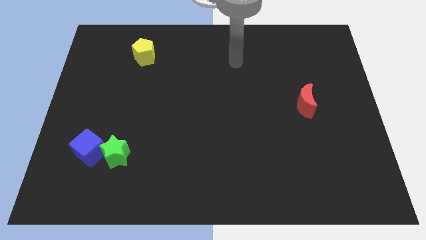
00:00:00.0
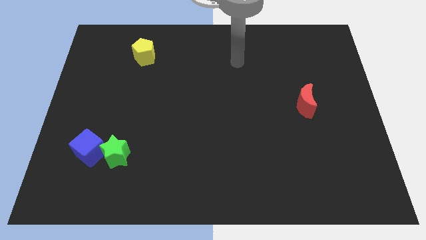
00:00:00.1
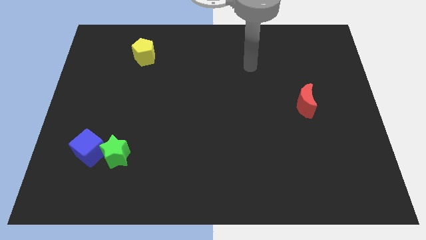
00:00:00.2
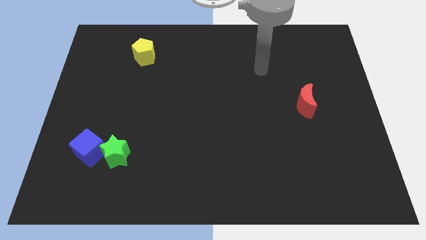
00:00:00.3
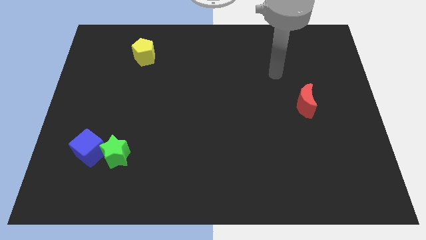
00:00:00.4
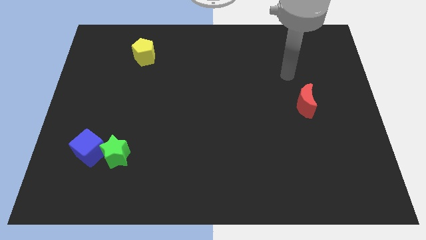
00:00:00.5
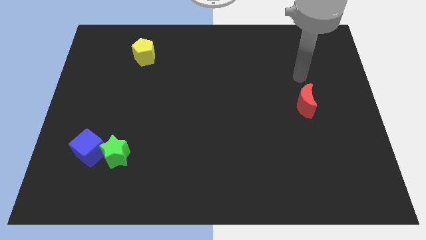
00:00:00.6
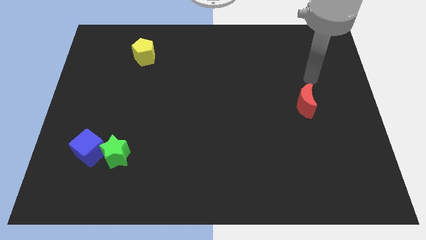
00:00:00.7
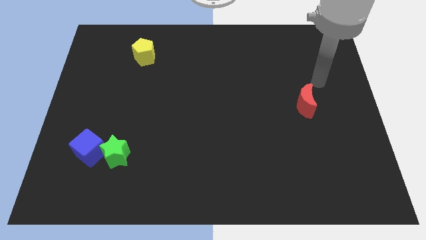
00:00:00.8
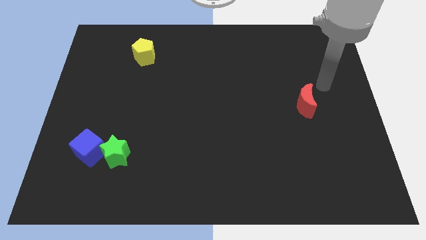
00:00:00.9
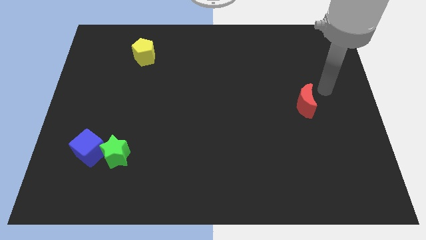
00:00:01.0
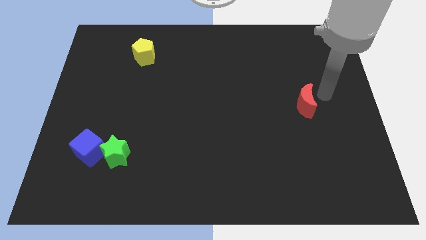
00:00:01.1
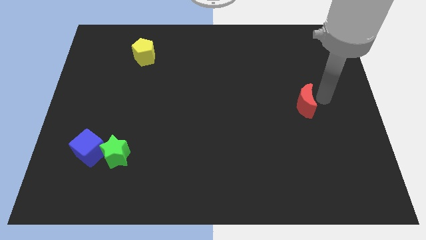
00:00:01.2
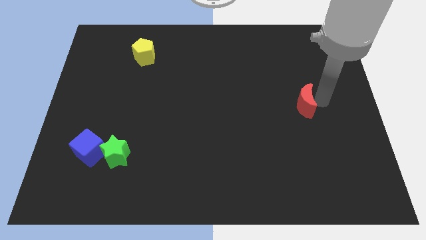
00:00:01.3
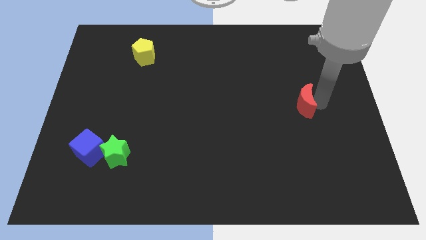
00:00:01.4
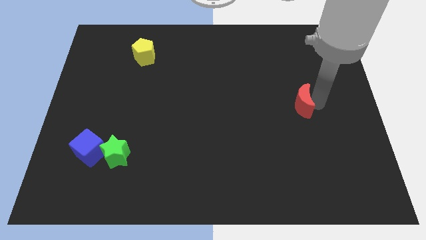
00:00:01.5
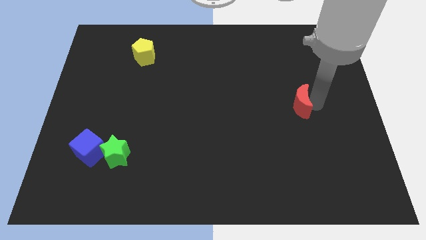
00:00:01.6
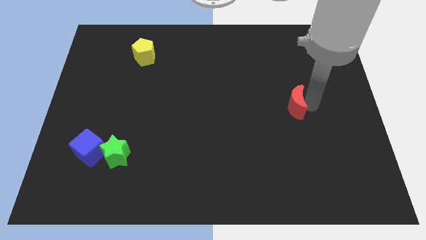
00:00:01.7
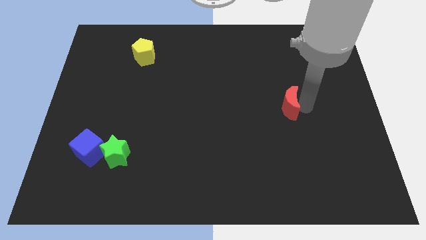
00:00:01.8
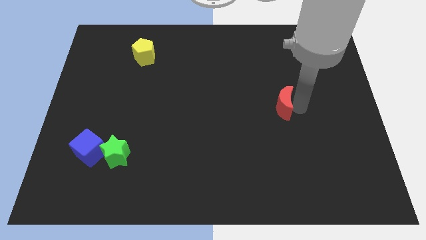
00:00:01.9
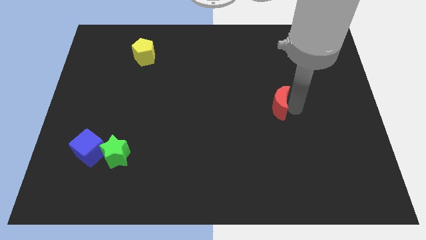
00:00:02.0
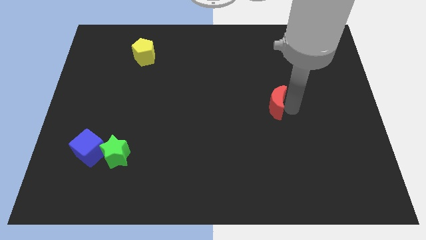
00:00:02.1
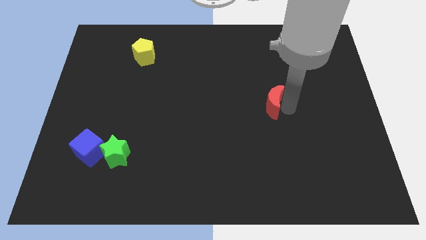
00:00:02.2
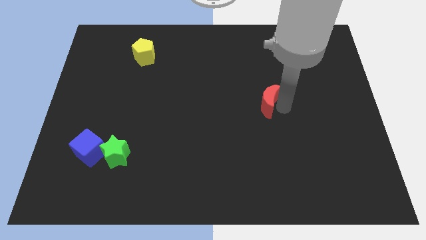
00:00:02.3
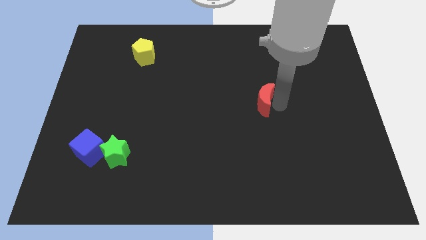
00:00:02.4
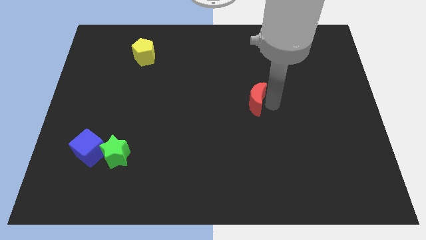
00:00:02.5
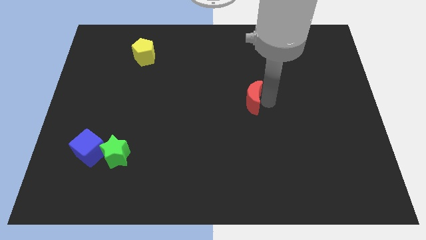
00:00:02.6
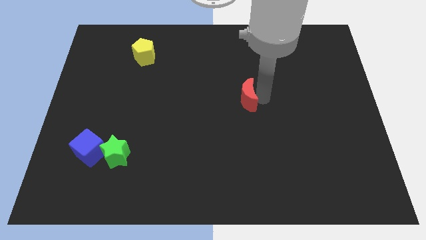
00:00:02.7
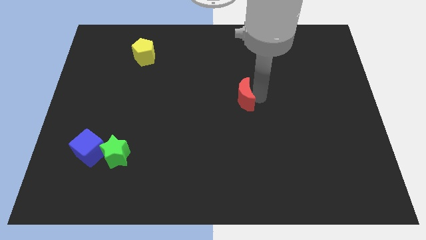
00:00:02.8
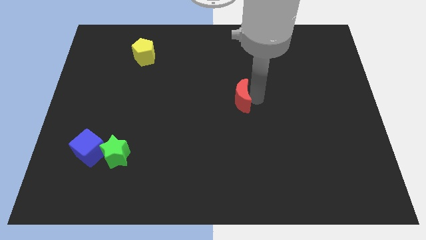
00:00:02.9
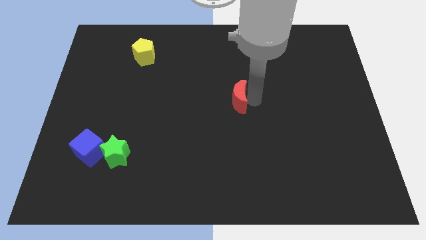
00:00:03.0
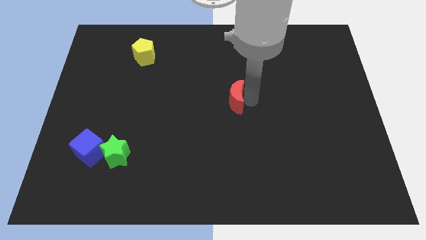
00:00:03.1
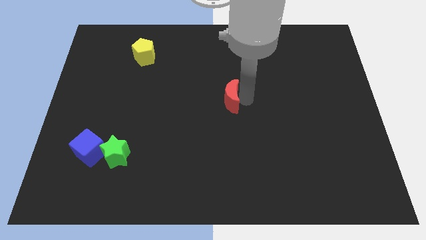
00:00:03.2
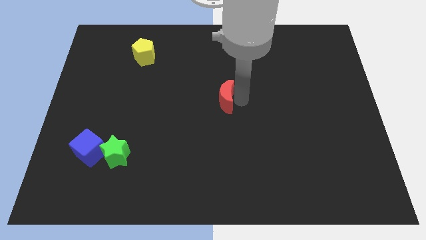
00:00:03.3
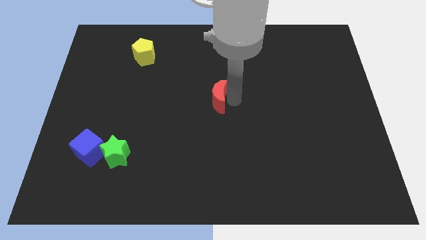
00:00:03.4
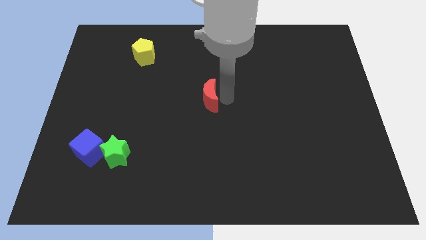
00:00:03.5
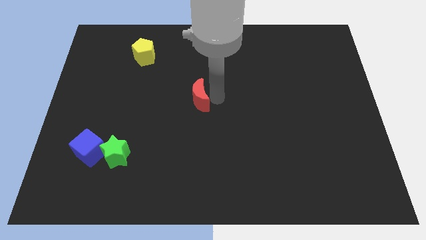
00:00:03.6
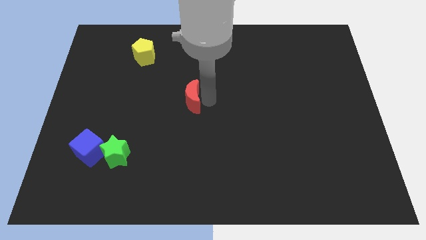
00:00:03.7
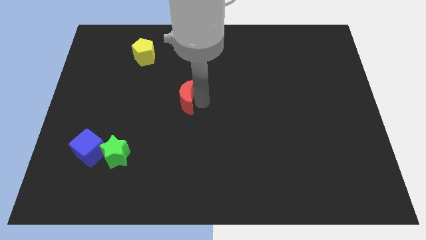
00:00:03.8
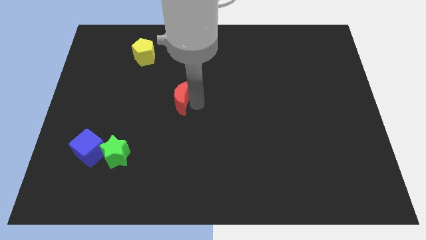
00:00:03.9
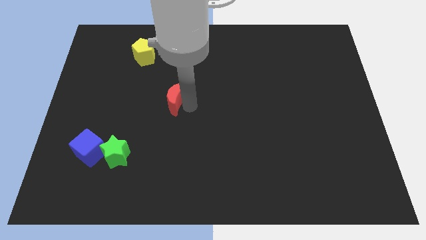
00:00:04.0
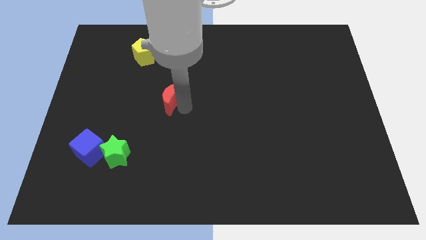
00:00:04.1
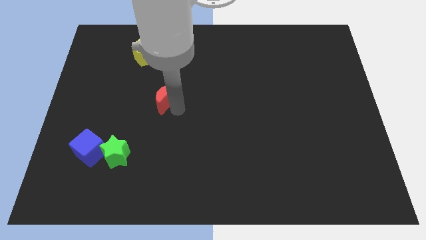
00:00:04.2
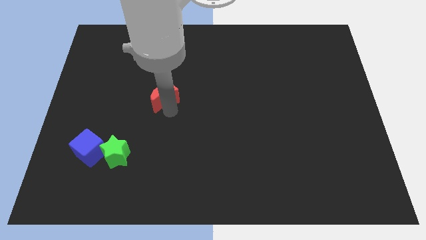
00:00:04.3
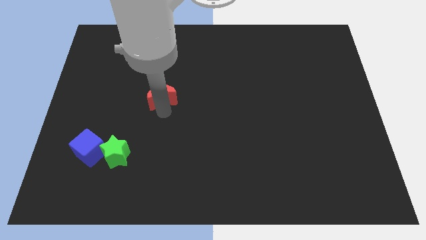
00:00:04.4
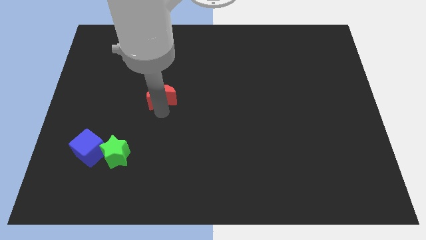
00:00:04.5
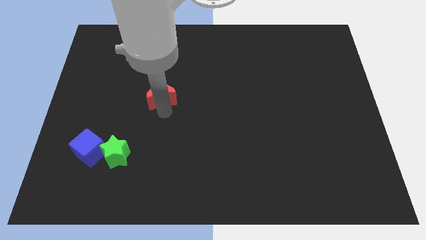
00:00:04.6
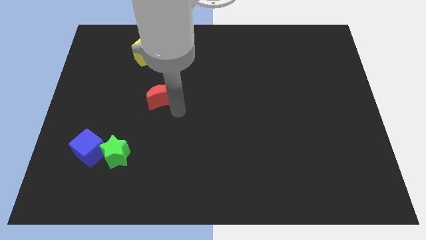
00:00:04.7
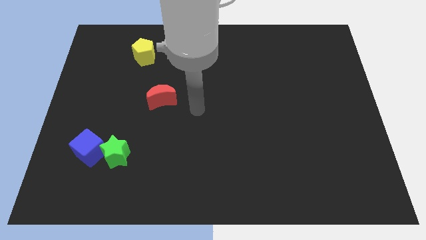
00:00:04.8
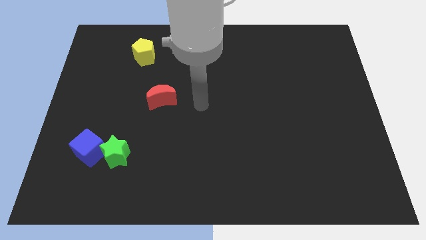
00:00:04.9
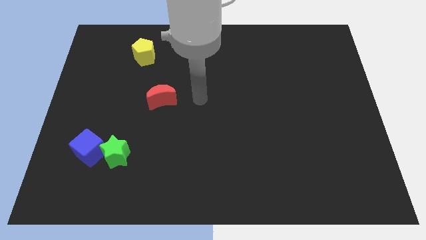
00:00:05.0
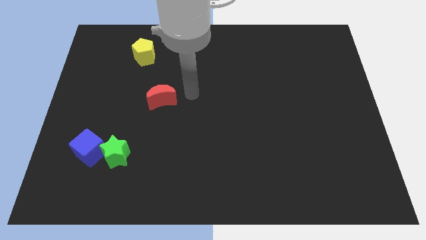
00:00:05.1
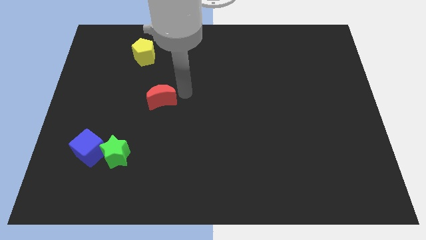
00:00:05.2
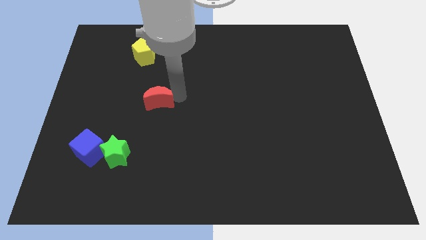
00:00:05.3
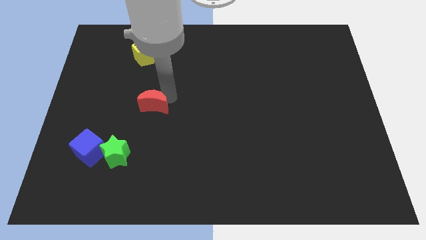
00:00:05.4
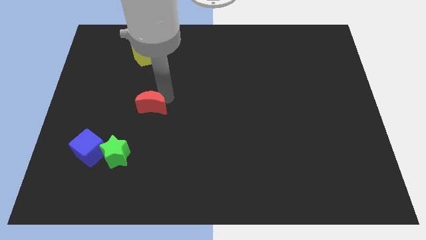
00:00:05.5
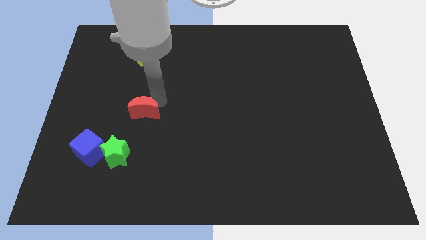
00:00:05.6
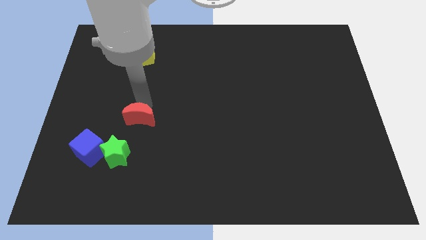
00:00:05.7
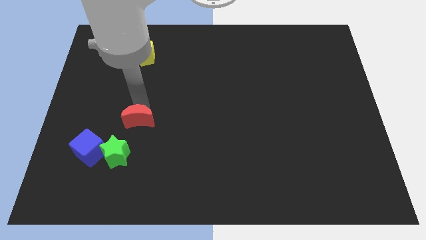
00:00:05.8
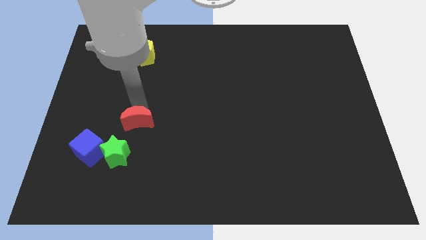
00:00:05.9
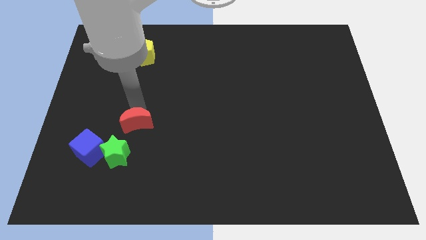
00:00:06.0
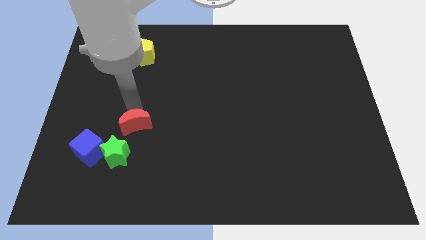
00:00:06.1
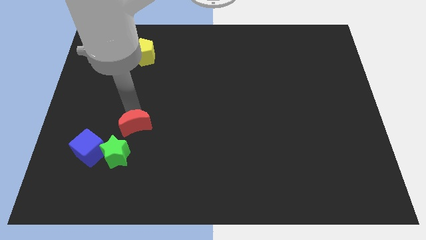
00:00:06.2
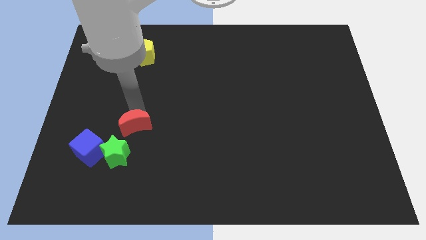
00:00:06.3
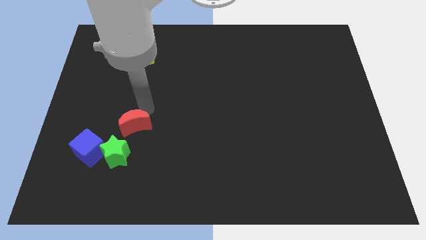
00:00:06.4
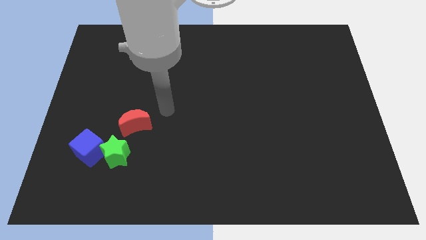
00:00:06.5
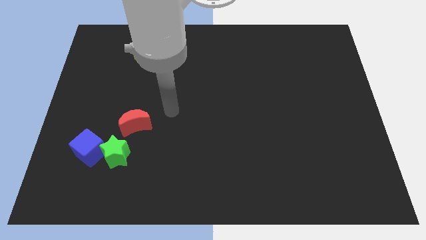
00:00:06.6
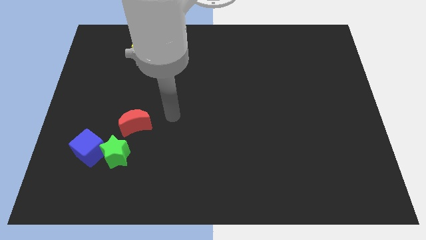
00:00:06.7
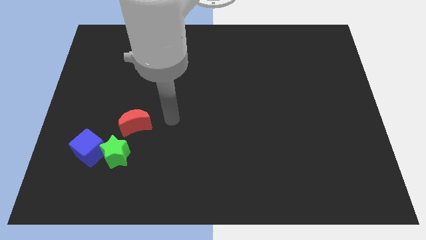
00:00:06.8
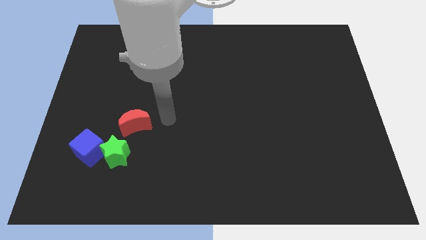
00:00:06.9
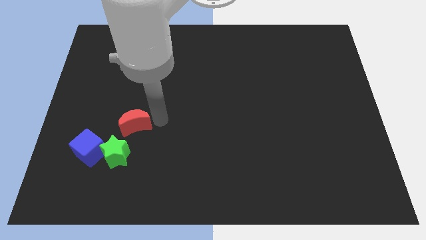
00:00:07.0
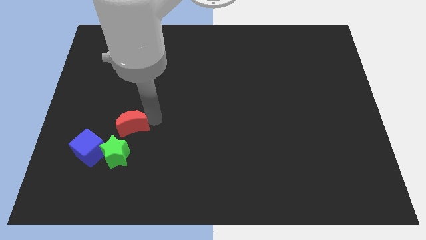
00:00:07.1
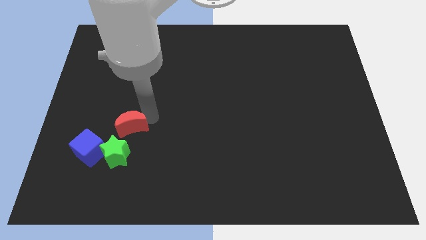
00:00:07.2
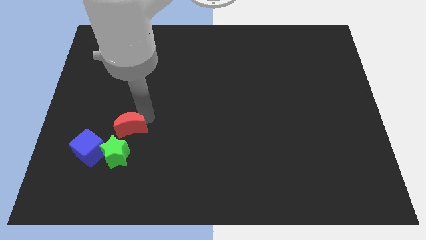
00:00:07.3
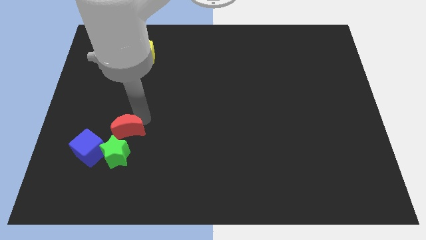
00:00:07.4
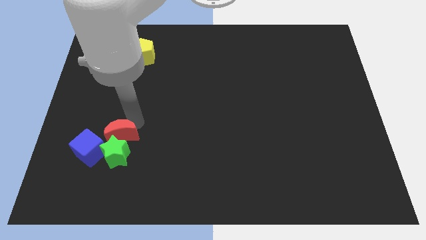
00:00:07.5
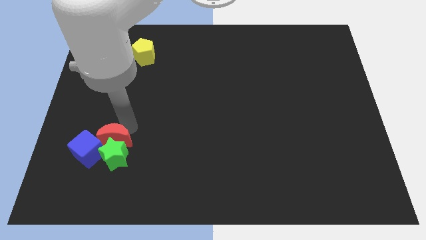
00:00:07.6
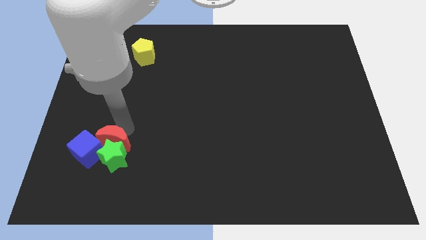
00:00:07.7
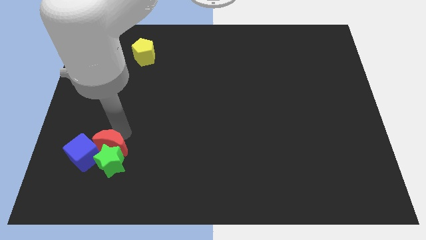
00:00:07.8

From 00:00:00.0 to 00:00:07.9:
put the red block next to the cube

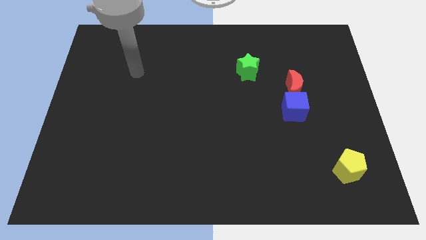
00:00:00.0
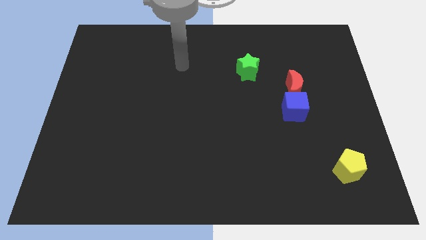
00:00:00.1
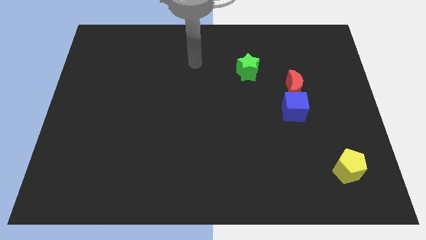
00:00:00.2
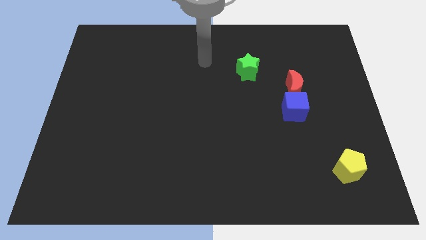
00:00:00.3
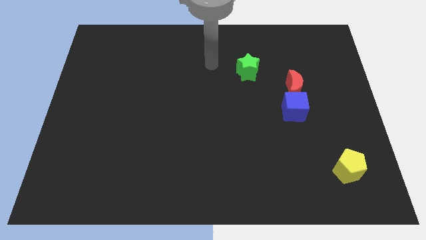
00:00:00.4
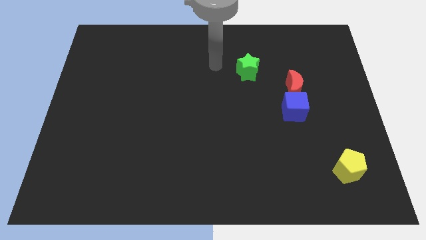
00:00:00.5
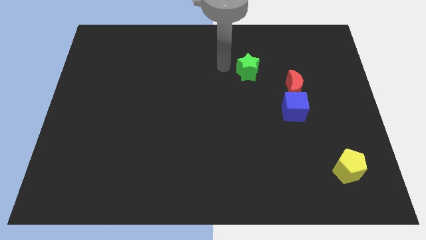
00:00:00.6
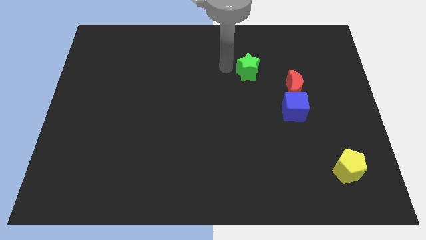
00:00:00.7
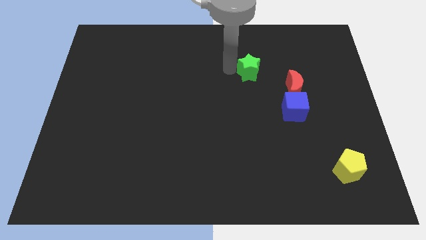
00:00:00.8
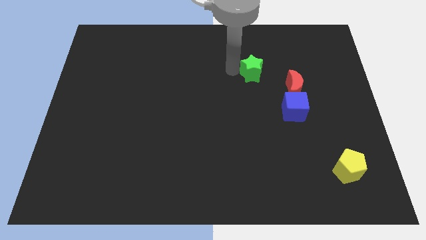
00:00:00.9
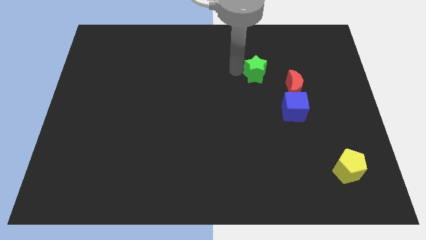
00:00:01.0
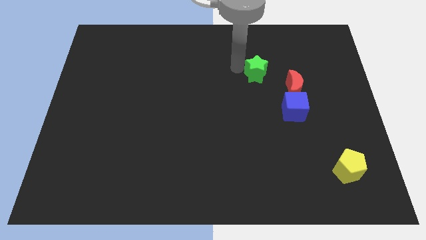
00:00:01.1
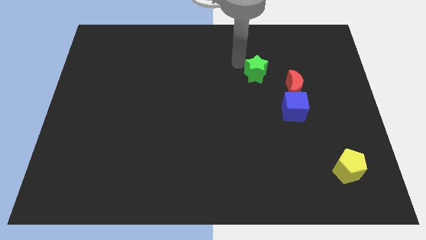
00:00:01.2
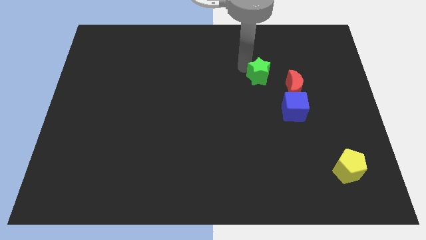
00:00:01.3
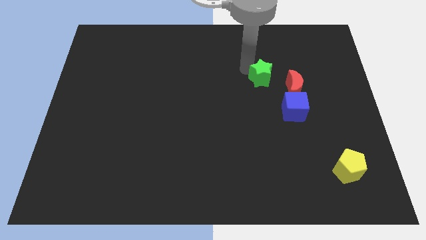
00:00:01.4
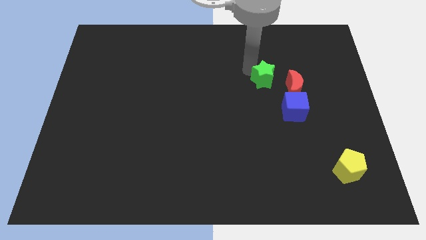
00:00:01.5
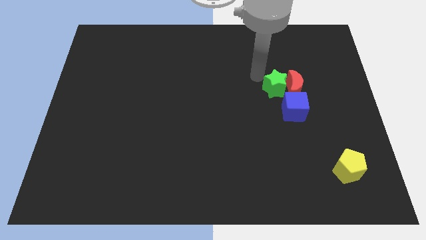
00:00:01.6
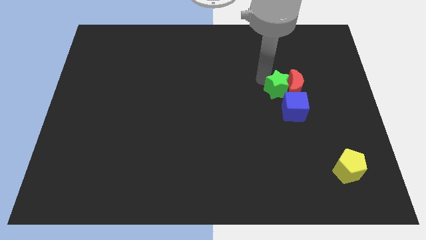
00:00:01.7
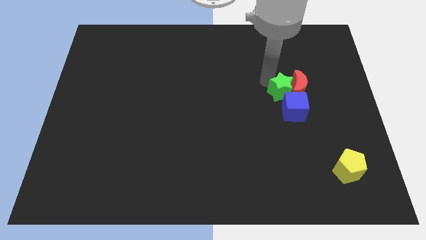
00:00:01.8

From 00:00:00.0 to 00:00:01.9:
slide the star next to the moon
